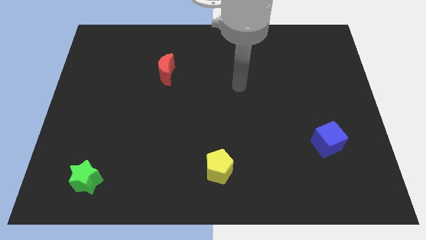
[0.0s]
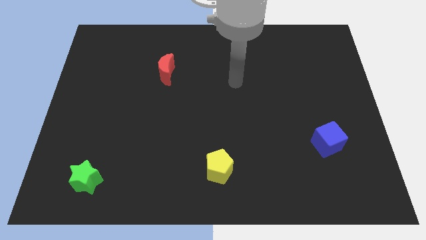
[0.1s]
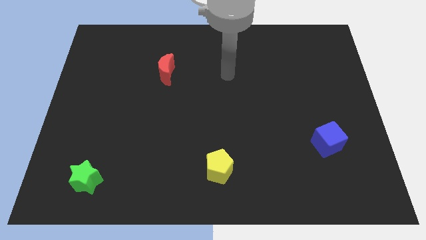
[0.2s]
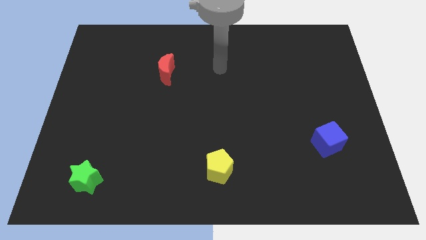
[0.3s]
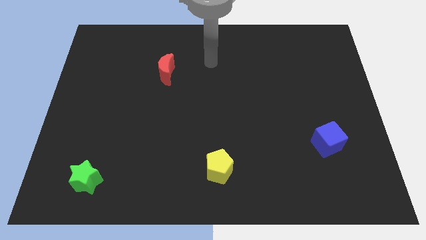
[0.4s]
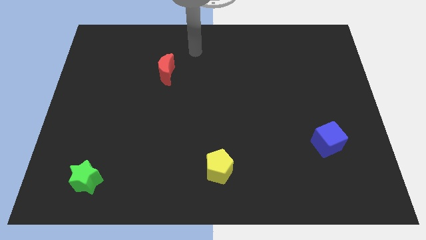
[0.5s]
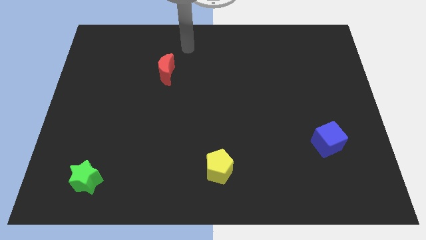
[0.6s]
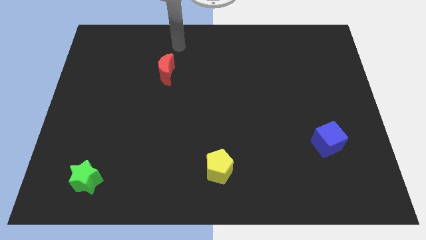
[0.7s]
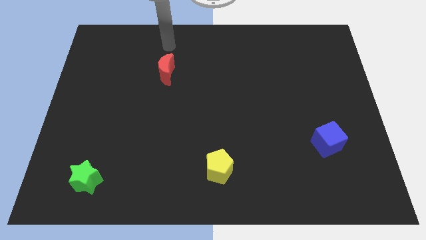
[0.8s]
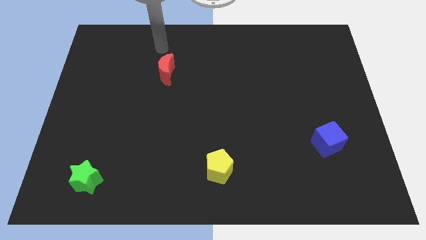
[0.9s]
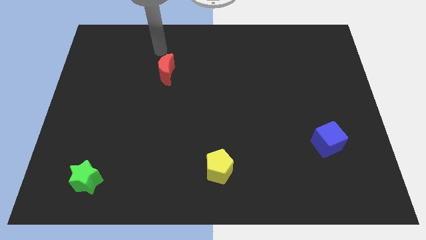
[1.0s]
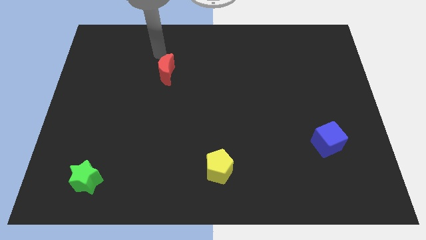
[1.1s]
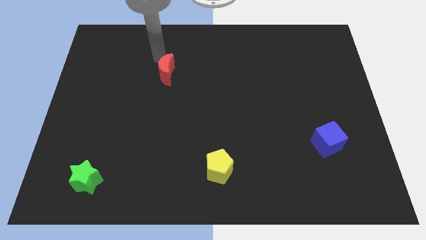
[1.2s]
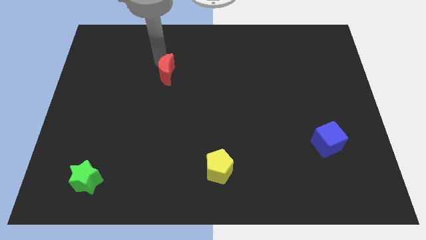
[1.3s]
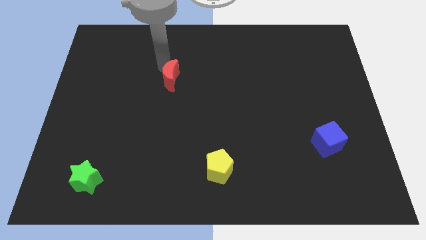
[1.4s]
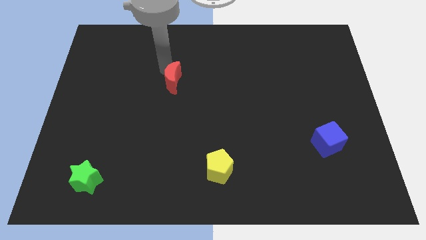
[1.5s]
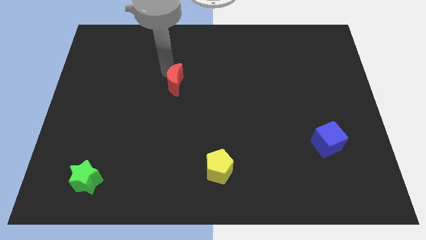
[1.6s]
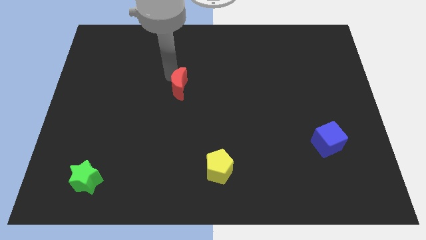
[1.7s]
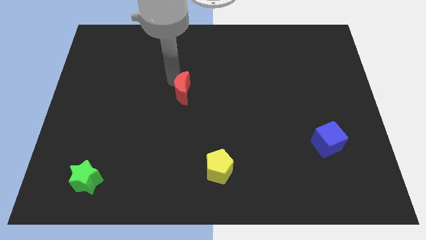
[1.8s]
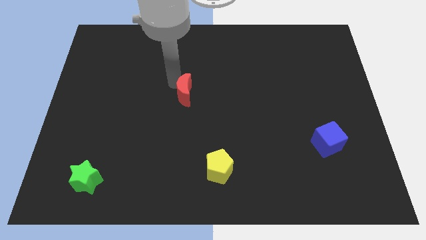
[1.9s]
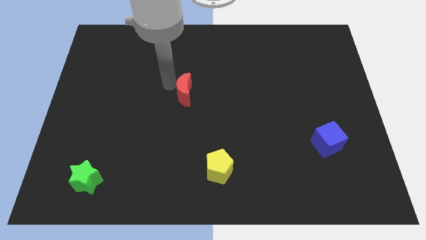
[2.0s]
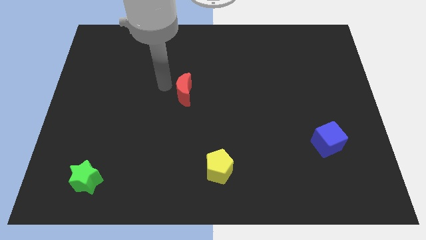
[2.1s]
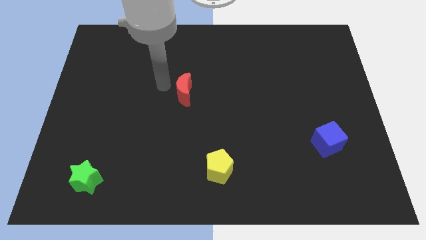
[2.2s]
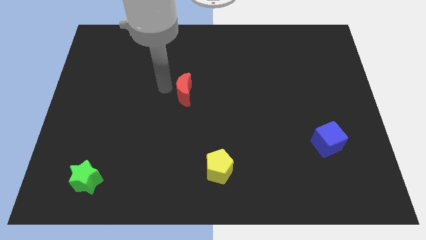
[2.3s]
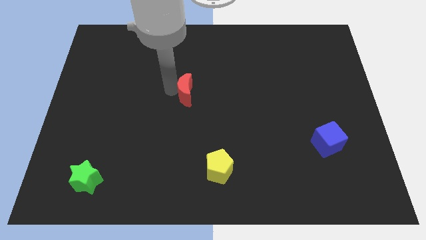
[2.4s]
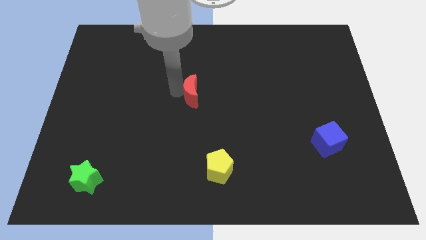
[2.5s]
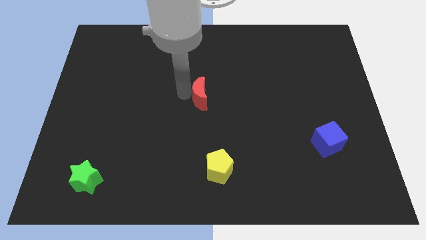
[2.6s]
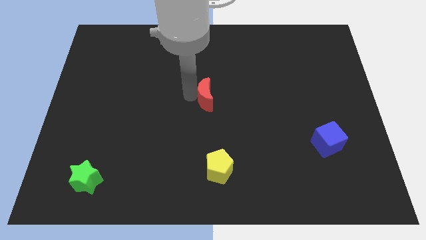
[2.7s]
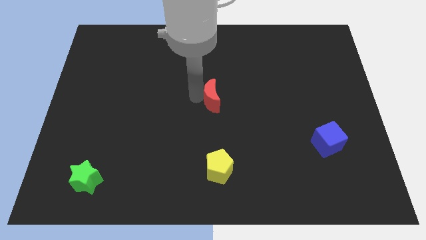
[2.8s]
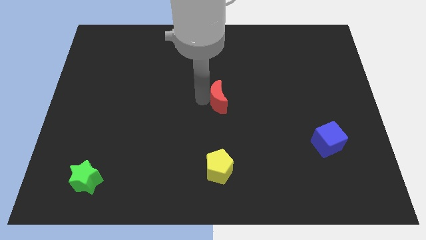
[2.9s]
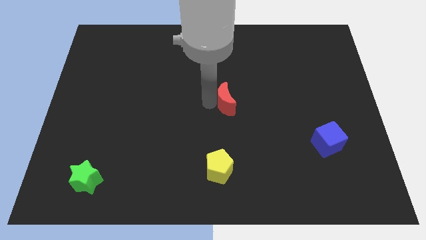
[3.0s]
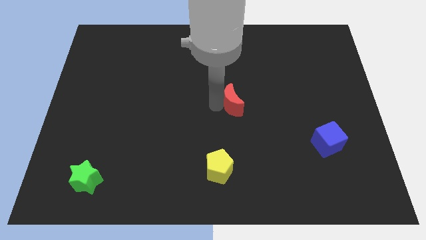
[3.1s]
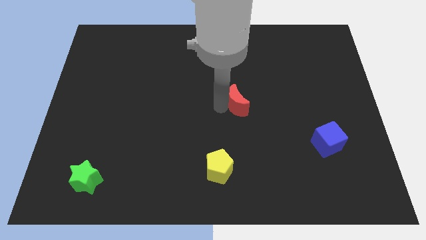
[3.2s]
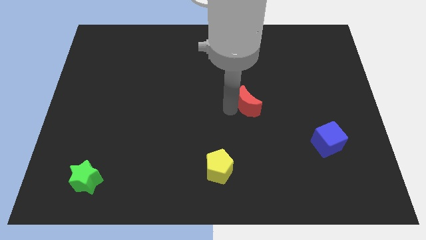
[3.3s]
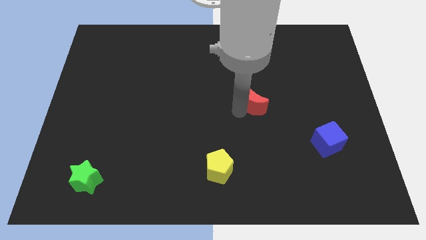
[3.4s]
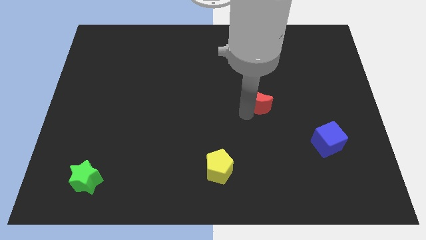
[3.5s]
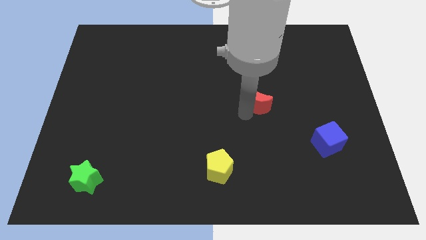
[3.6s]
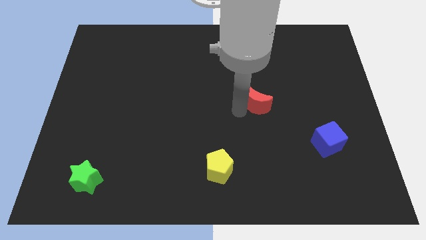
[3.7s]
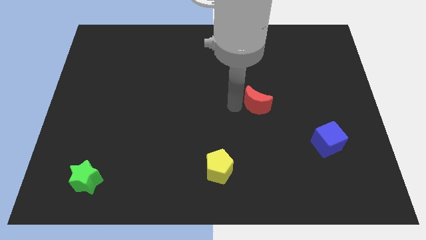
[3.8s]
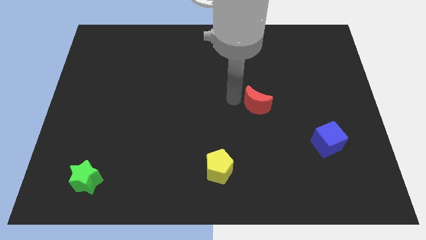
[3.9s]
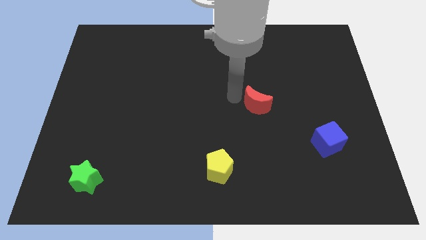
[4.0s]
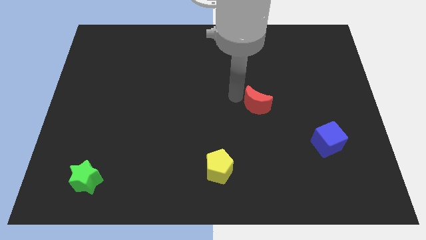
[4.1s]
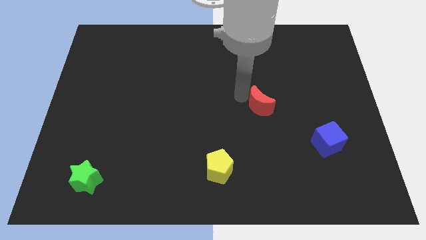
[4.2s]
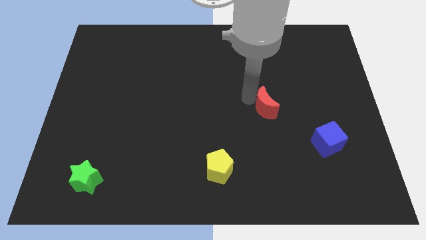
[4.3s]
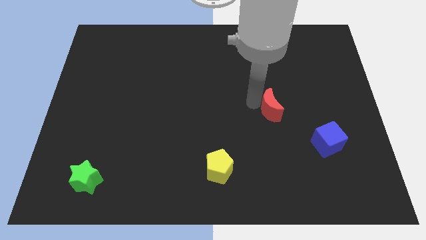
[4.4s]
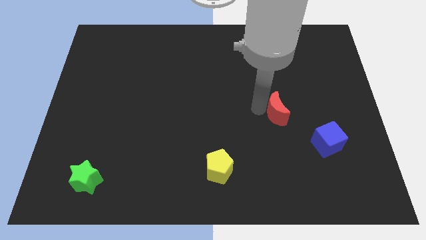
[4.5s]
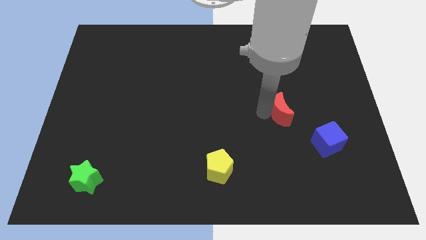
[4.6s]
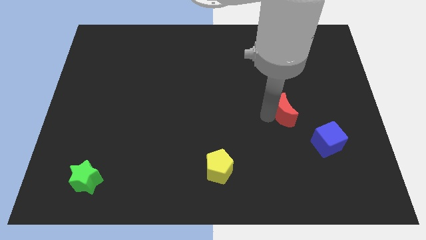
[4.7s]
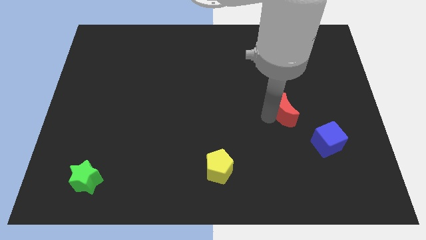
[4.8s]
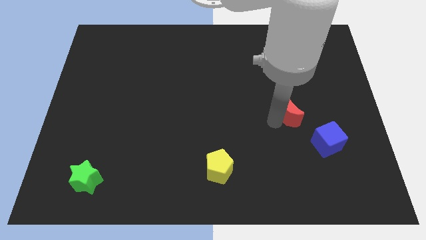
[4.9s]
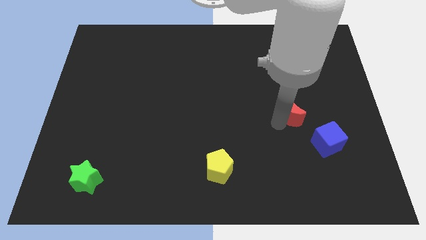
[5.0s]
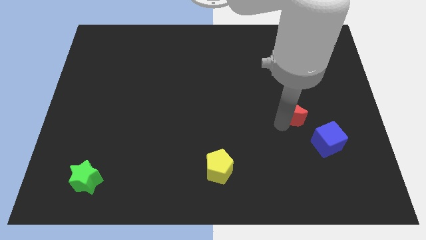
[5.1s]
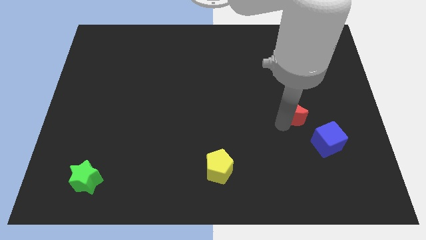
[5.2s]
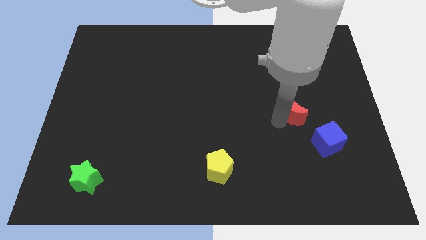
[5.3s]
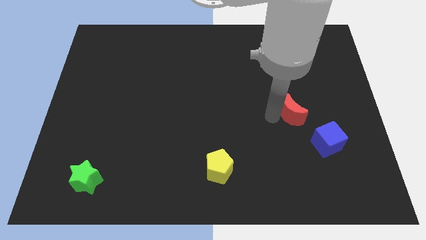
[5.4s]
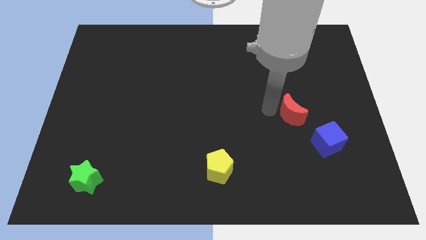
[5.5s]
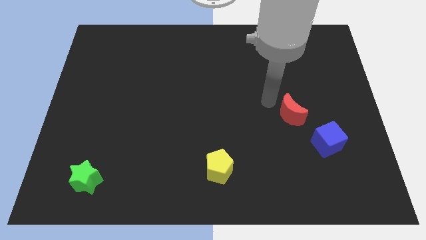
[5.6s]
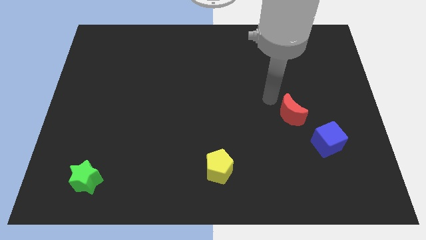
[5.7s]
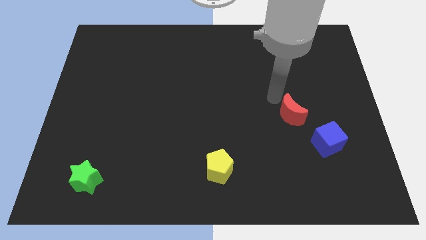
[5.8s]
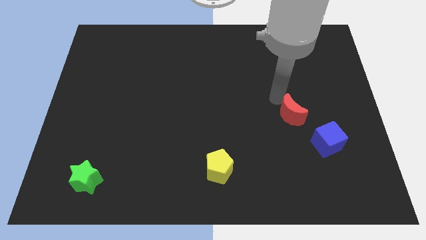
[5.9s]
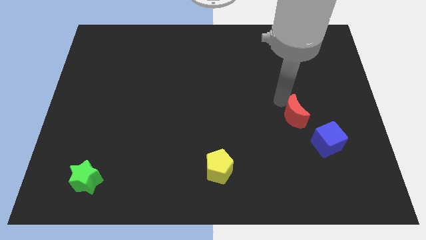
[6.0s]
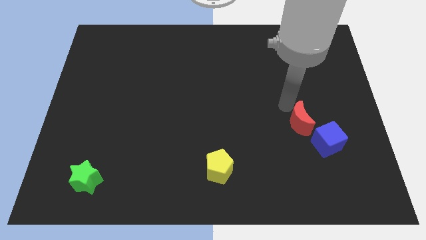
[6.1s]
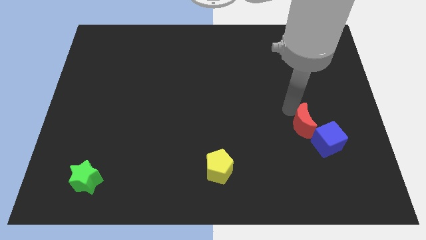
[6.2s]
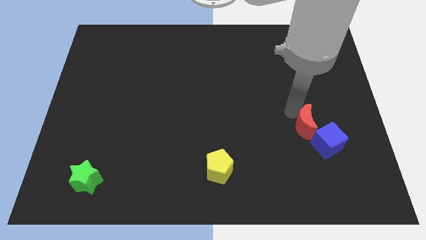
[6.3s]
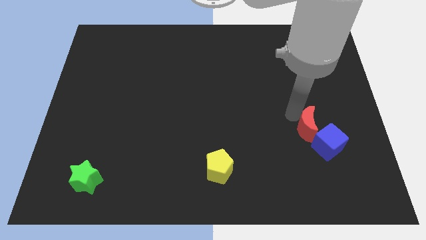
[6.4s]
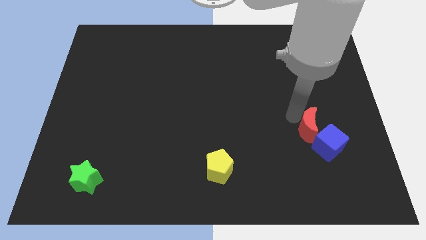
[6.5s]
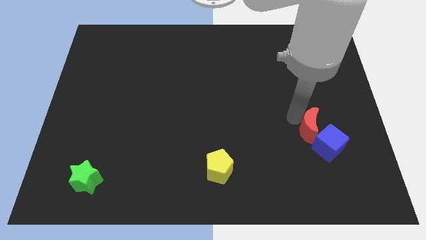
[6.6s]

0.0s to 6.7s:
move the red moon close to the blue cube

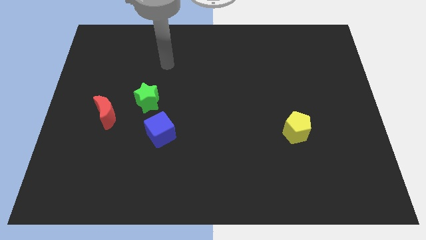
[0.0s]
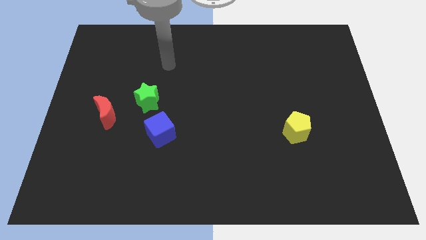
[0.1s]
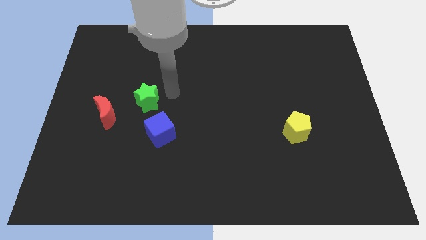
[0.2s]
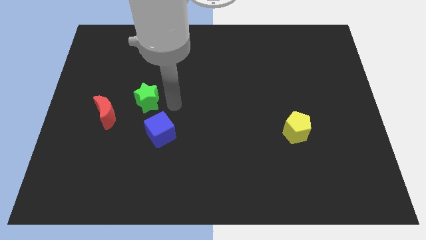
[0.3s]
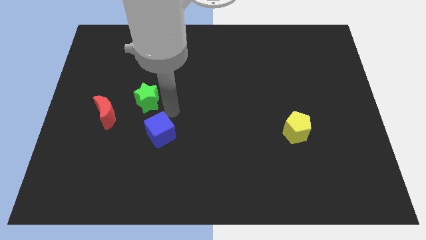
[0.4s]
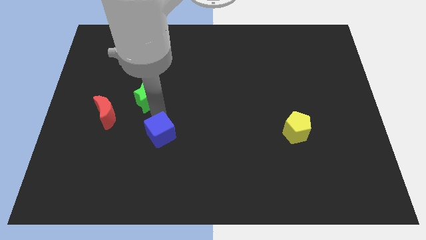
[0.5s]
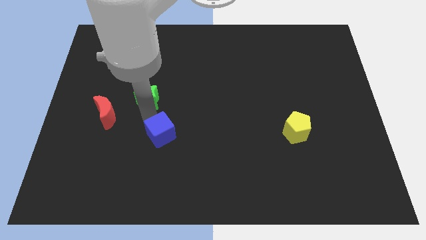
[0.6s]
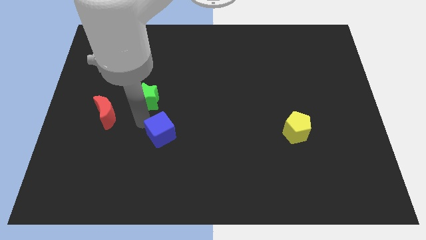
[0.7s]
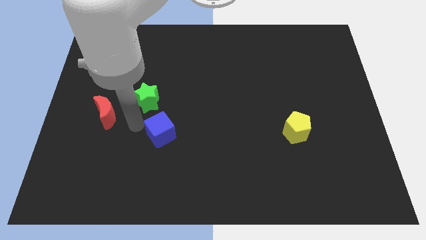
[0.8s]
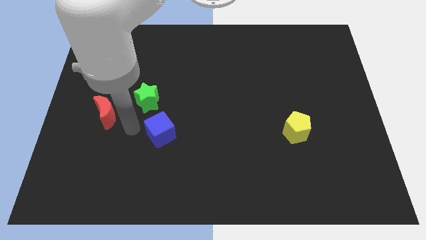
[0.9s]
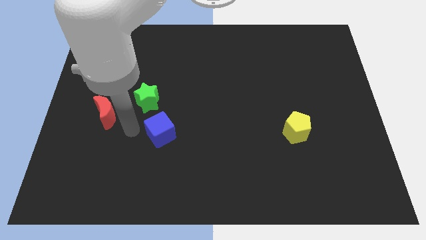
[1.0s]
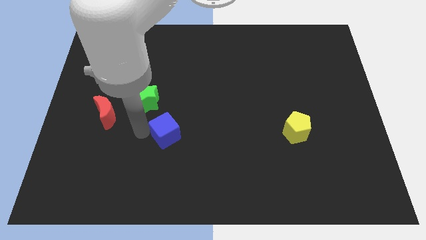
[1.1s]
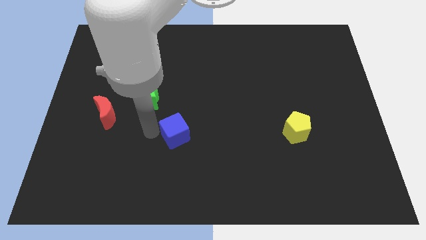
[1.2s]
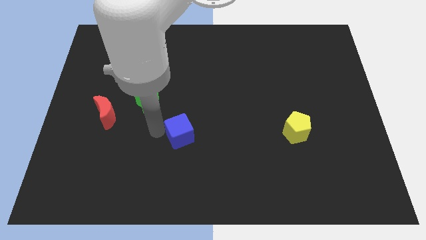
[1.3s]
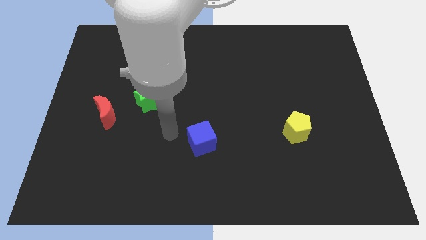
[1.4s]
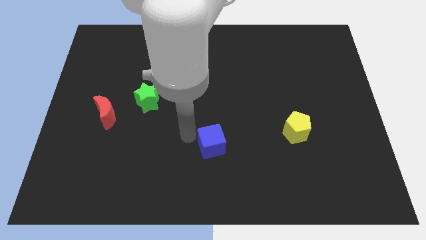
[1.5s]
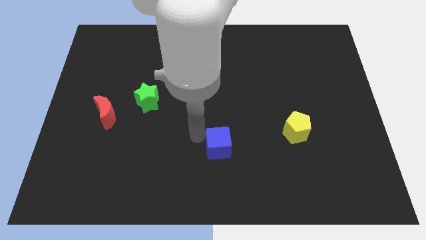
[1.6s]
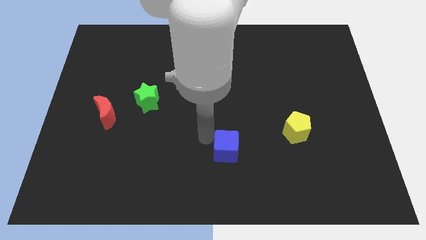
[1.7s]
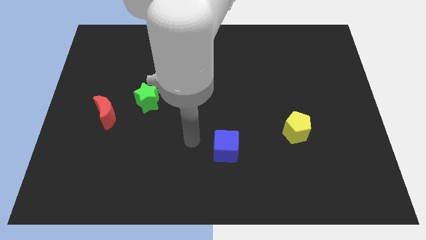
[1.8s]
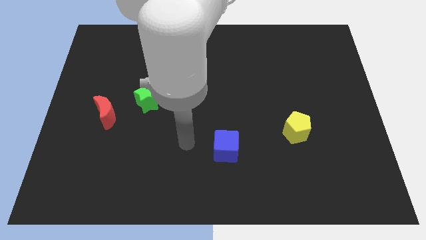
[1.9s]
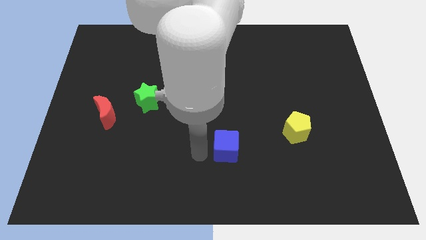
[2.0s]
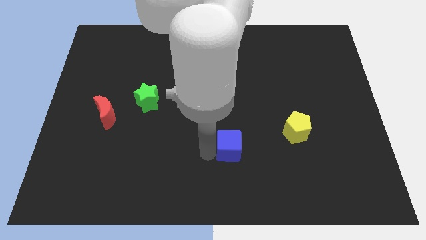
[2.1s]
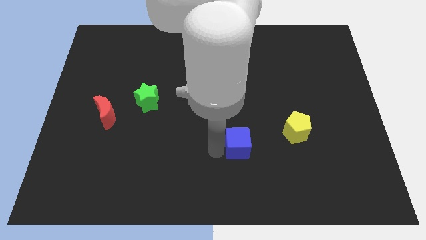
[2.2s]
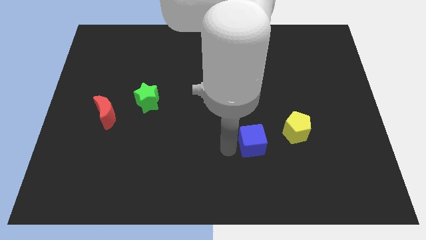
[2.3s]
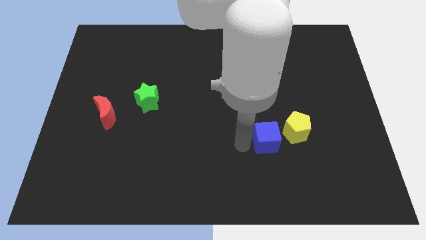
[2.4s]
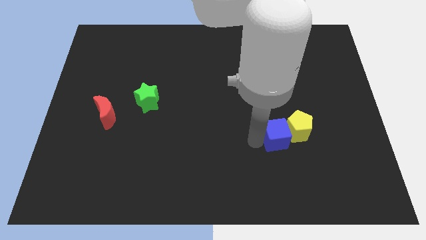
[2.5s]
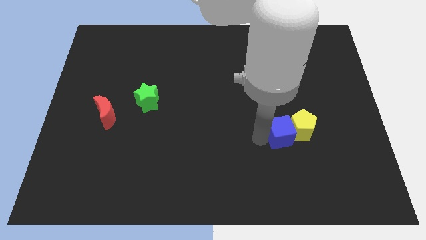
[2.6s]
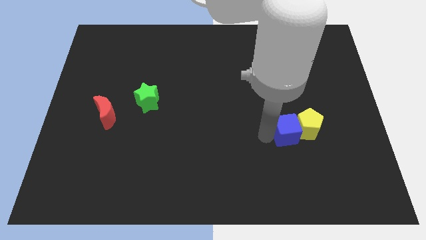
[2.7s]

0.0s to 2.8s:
put the cube next to the yellow block
